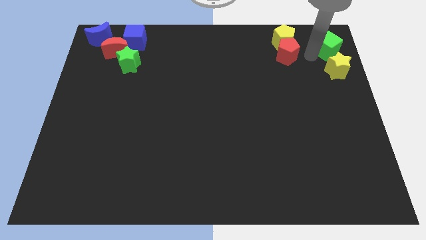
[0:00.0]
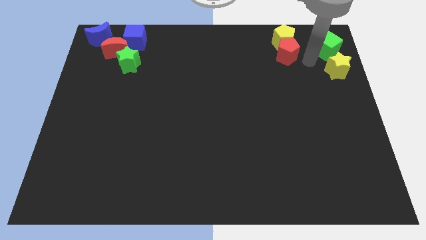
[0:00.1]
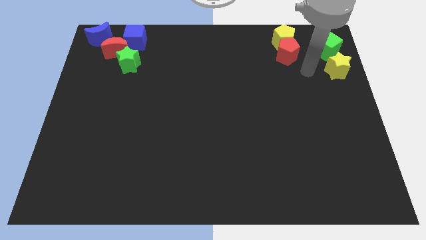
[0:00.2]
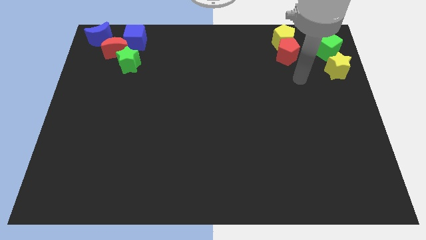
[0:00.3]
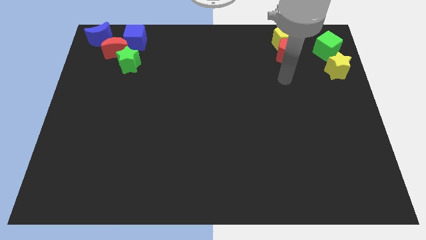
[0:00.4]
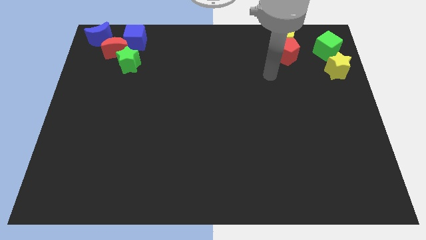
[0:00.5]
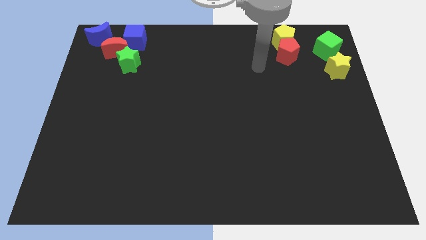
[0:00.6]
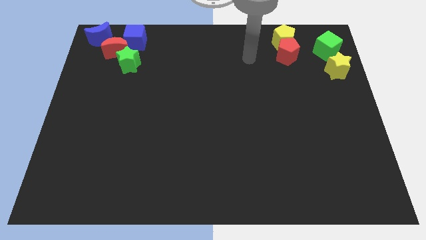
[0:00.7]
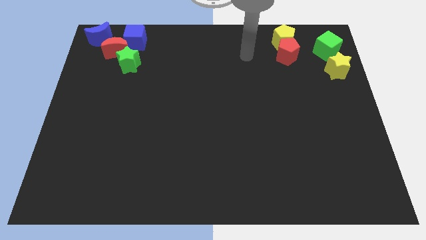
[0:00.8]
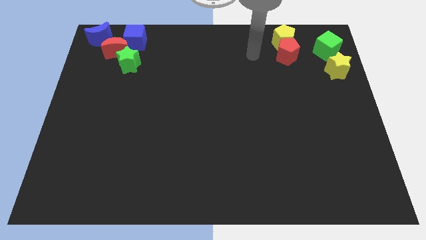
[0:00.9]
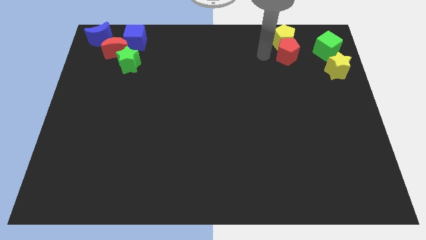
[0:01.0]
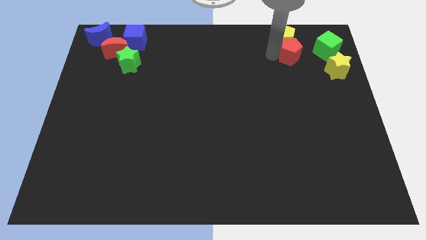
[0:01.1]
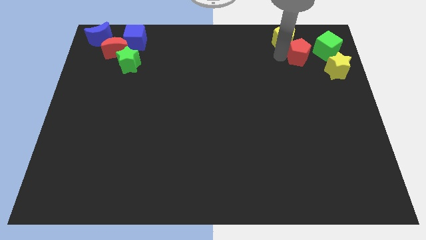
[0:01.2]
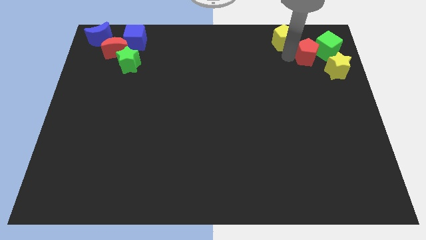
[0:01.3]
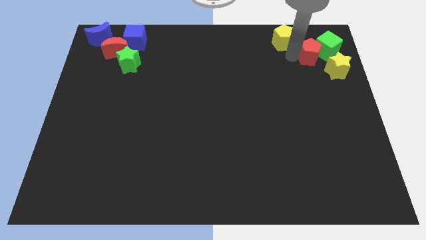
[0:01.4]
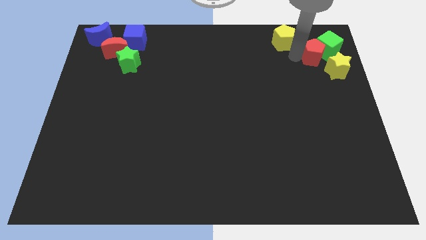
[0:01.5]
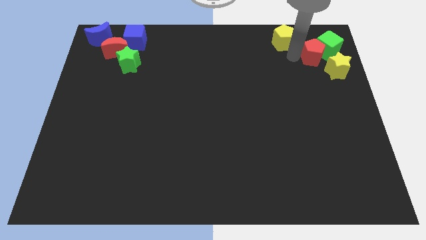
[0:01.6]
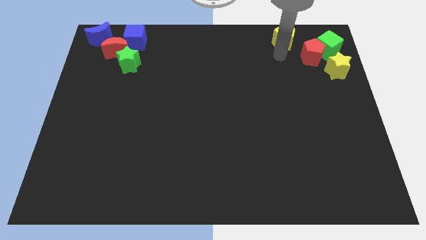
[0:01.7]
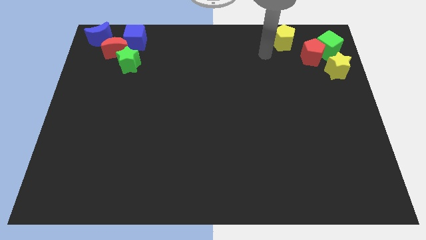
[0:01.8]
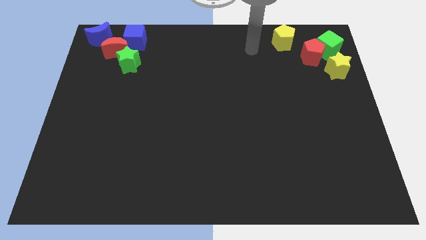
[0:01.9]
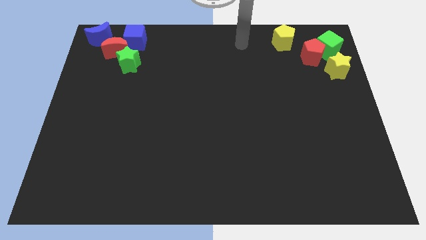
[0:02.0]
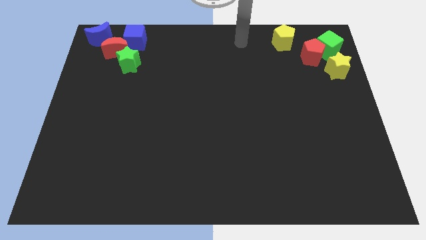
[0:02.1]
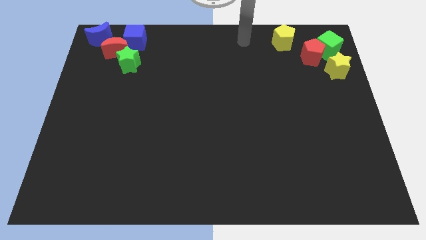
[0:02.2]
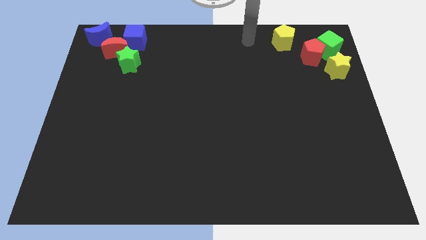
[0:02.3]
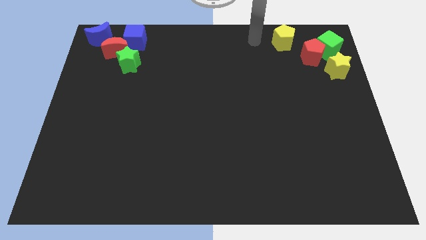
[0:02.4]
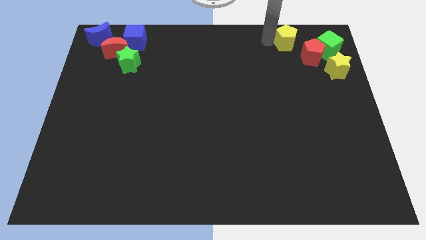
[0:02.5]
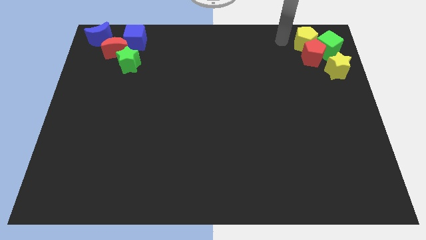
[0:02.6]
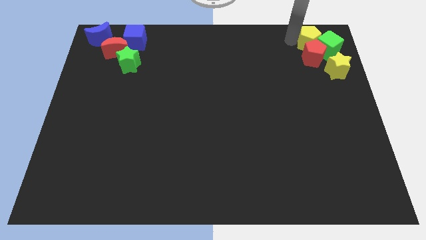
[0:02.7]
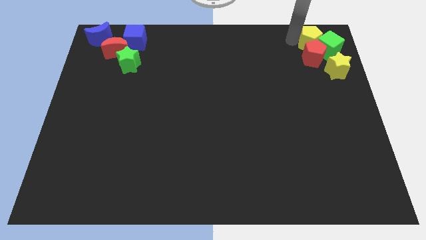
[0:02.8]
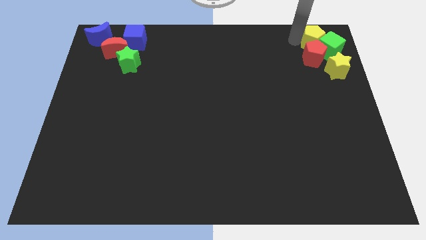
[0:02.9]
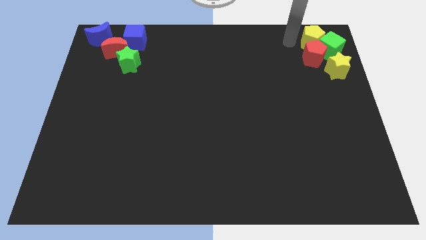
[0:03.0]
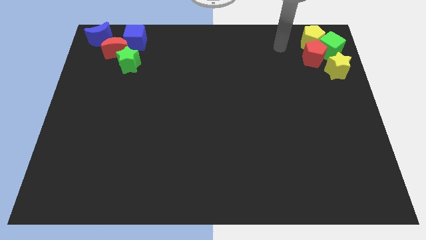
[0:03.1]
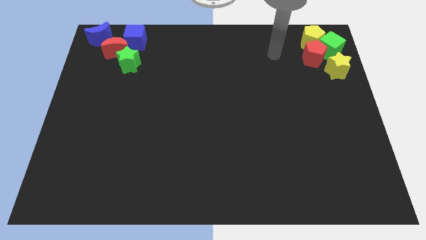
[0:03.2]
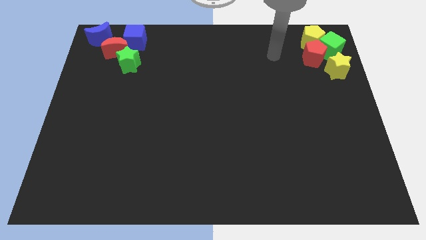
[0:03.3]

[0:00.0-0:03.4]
move the yellow pentagon diagonally above the green cube

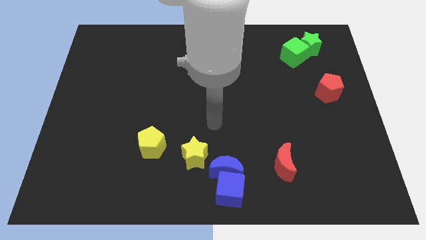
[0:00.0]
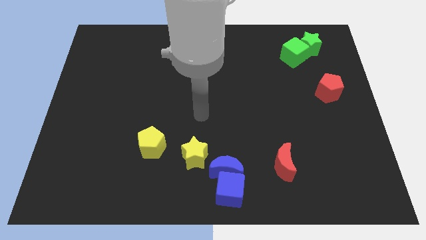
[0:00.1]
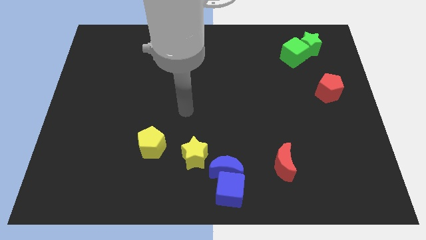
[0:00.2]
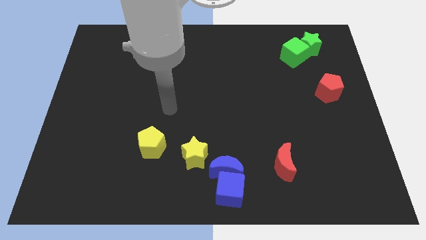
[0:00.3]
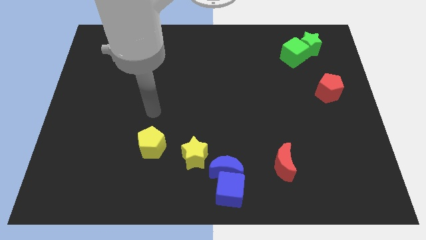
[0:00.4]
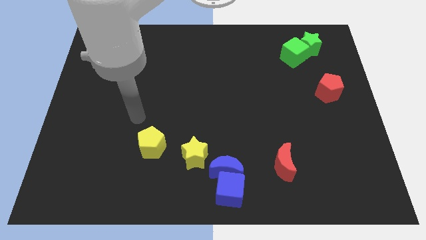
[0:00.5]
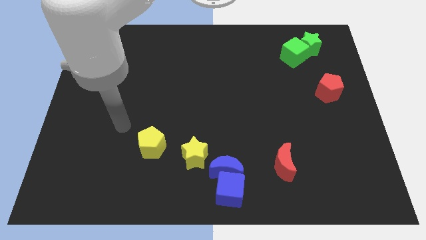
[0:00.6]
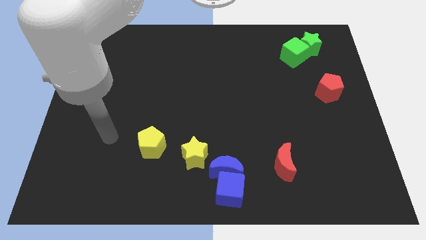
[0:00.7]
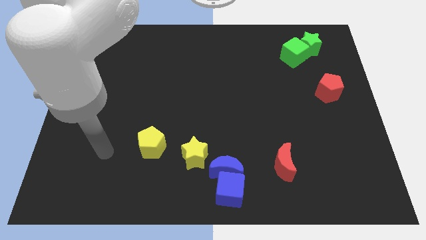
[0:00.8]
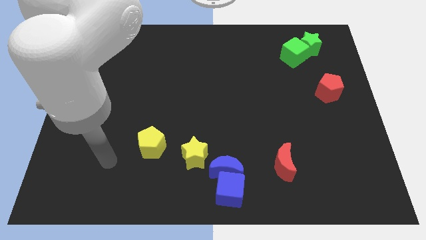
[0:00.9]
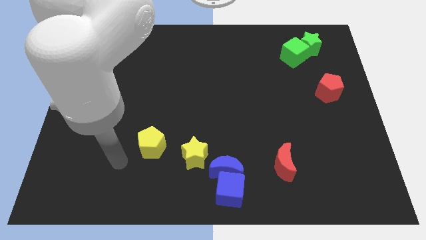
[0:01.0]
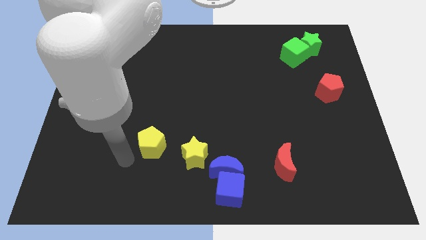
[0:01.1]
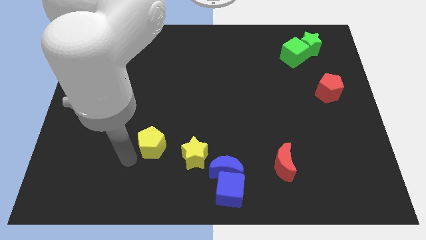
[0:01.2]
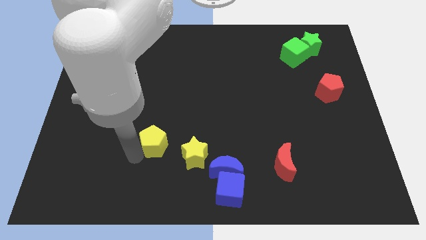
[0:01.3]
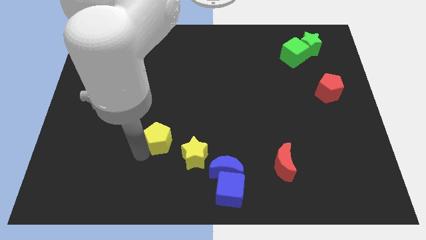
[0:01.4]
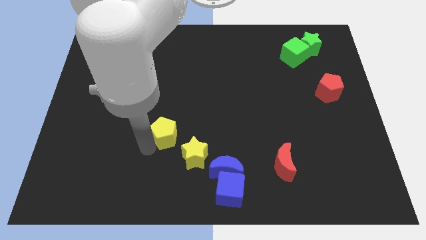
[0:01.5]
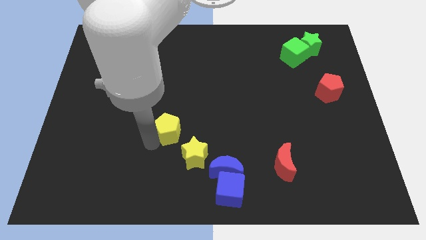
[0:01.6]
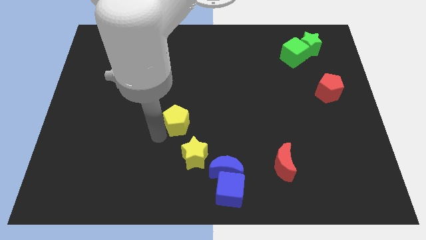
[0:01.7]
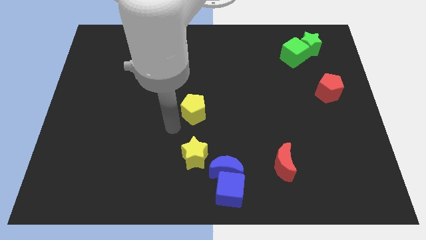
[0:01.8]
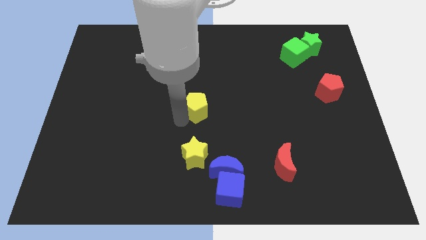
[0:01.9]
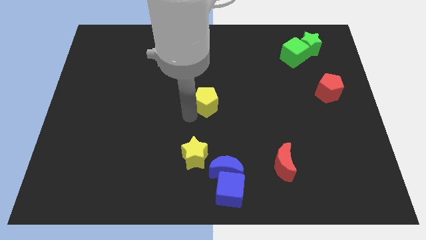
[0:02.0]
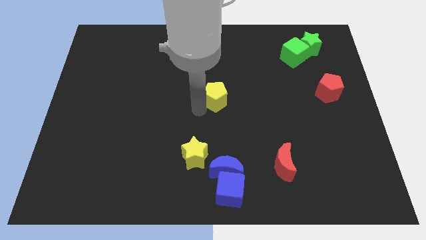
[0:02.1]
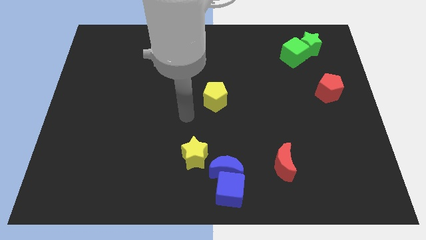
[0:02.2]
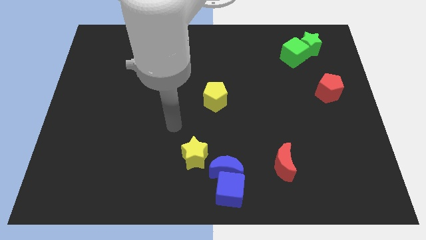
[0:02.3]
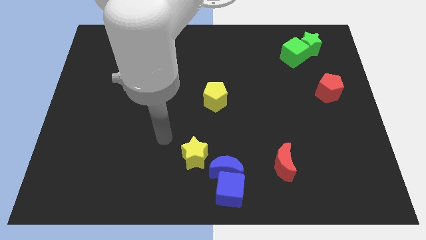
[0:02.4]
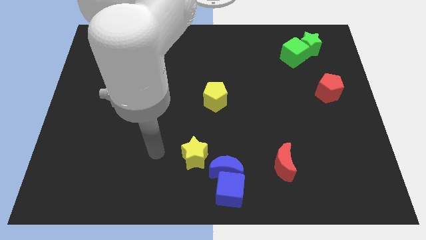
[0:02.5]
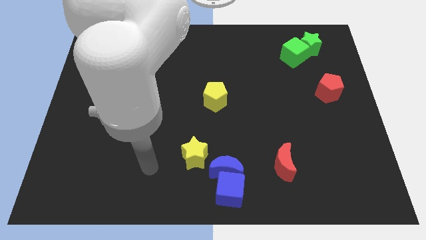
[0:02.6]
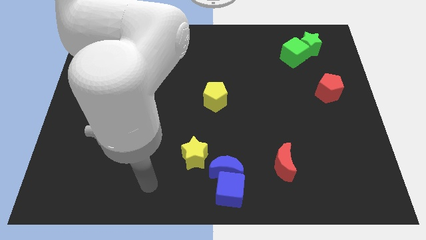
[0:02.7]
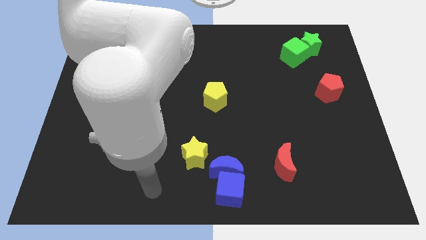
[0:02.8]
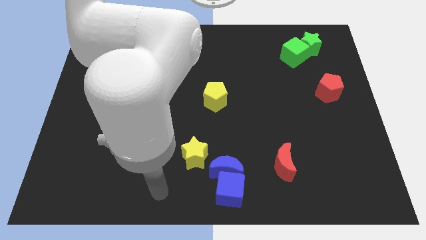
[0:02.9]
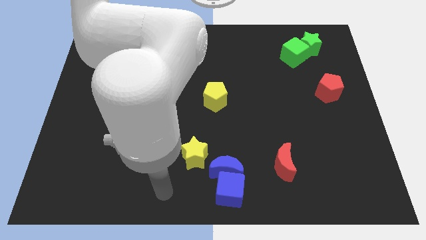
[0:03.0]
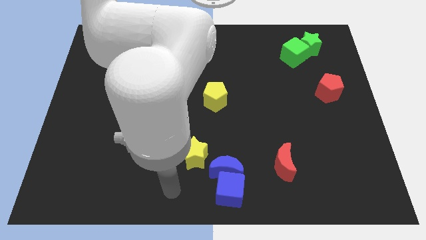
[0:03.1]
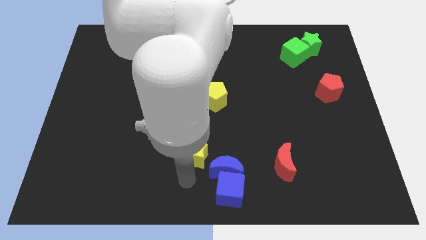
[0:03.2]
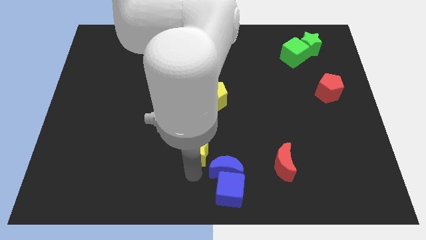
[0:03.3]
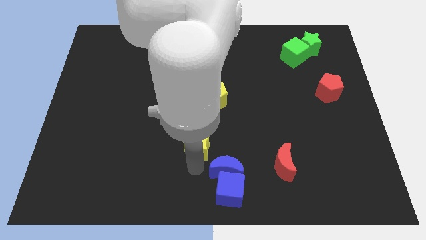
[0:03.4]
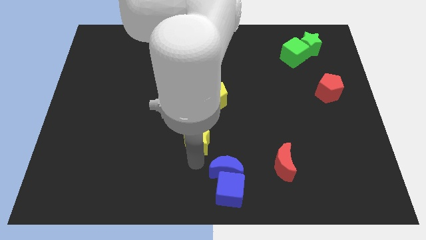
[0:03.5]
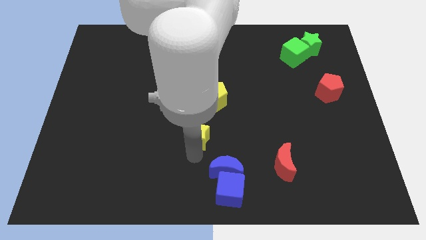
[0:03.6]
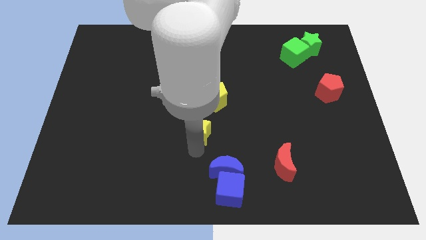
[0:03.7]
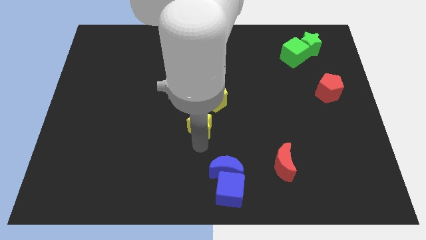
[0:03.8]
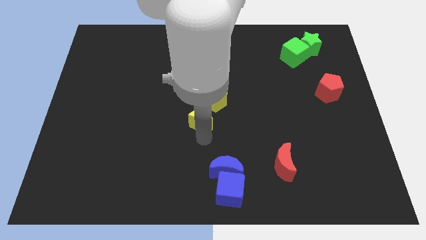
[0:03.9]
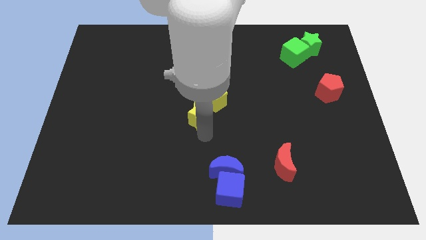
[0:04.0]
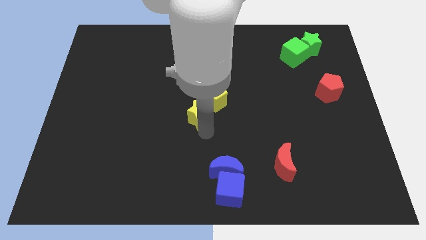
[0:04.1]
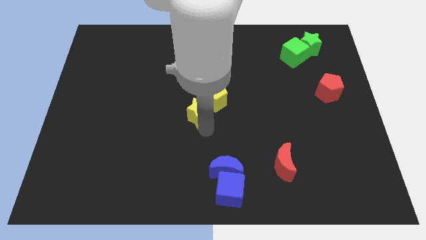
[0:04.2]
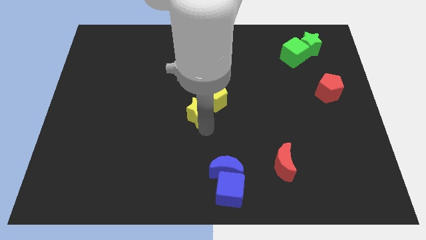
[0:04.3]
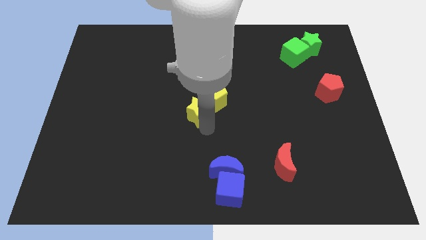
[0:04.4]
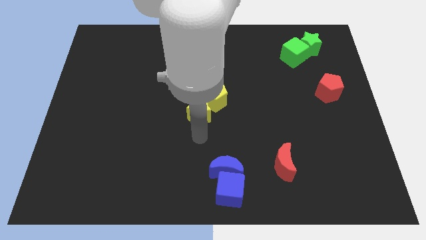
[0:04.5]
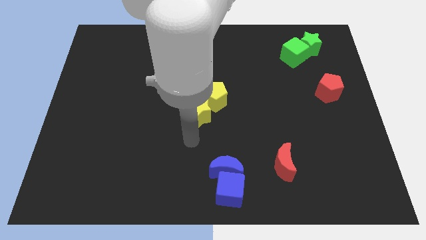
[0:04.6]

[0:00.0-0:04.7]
move the yellow pentagon and yellow star to the center of the board

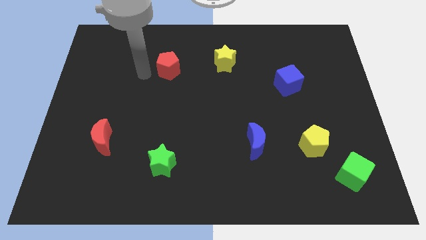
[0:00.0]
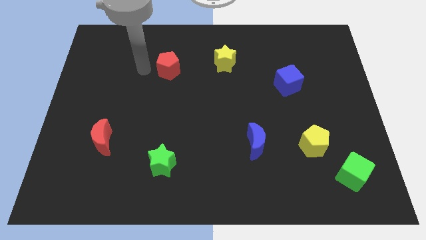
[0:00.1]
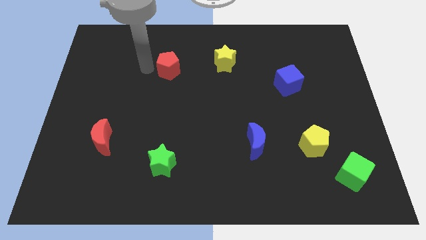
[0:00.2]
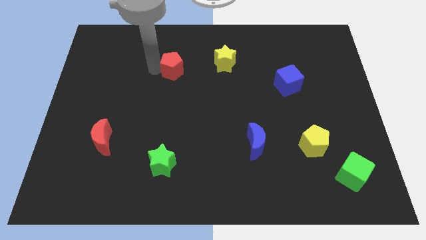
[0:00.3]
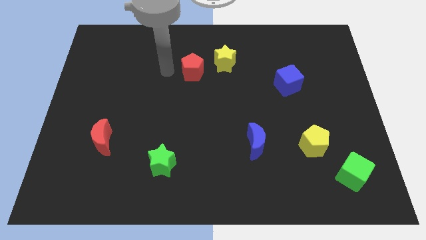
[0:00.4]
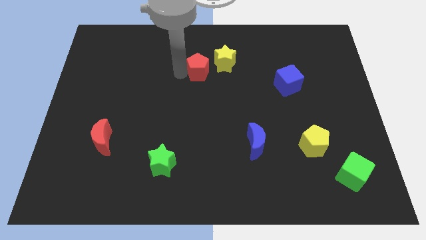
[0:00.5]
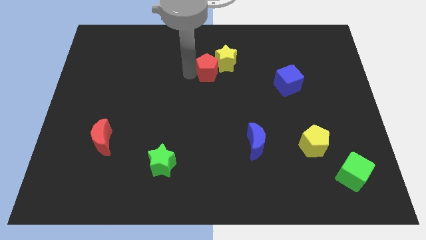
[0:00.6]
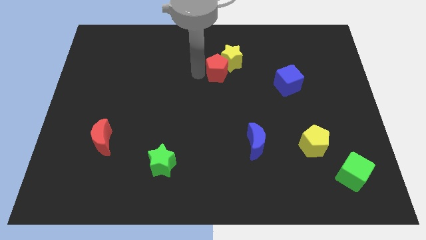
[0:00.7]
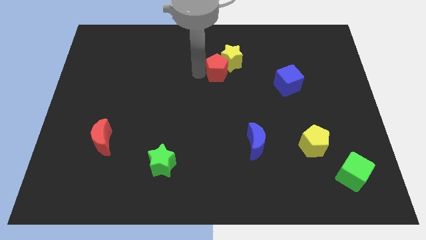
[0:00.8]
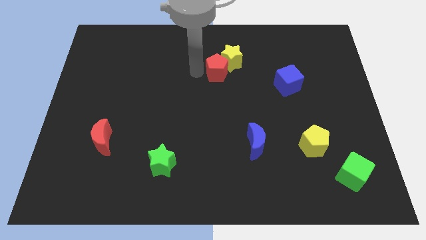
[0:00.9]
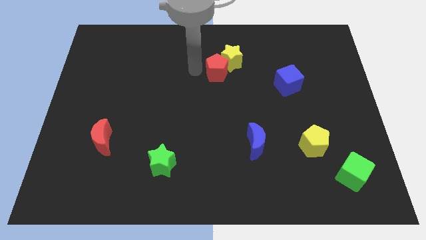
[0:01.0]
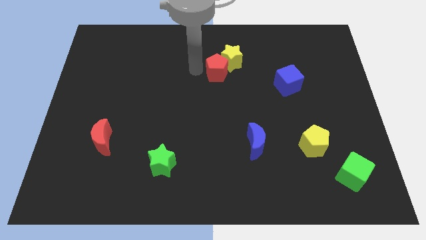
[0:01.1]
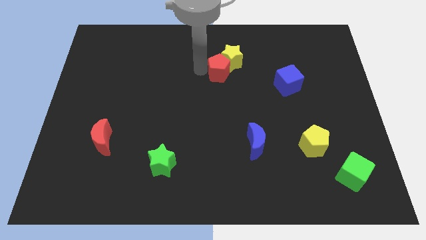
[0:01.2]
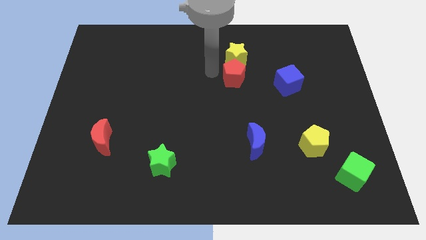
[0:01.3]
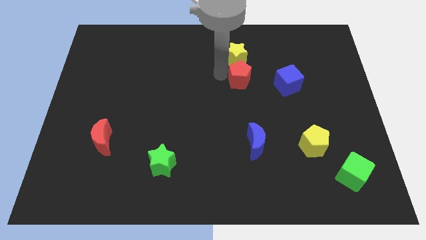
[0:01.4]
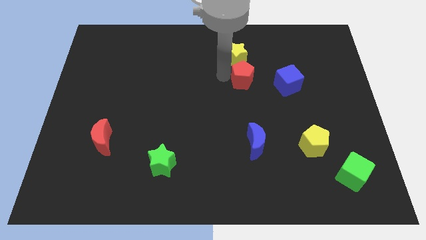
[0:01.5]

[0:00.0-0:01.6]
move the red pentagon to the bottom of the yellow star
